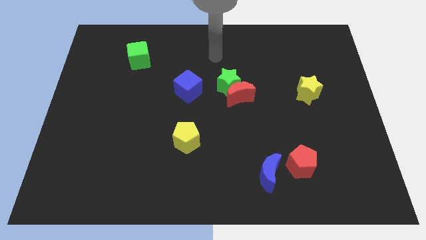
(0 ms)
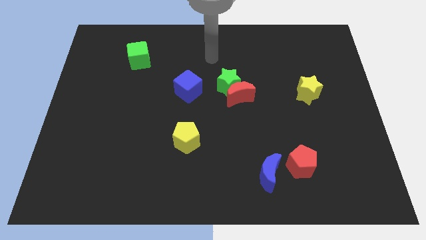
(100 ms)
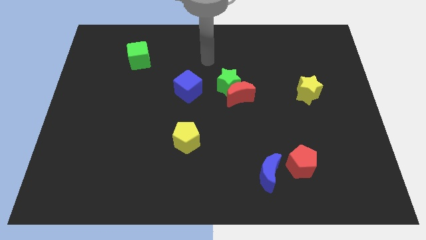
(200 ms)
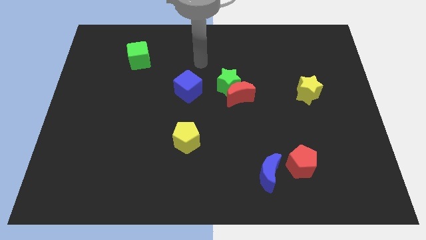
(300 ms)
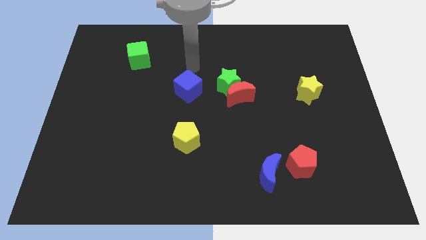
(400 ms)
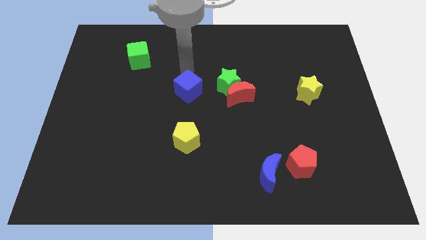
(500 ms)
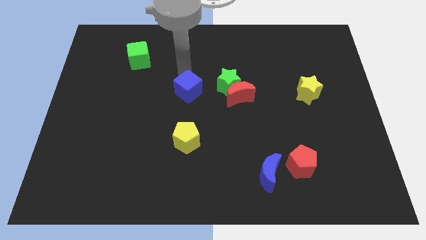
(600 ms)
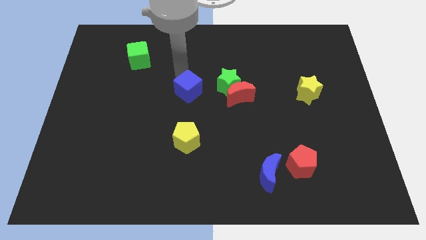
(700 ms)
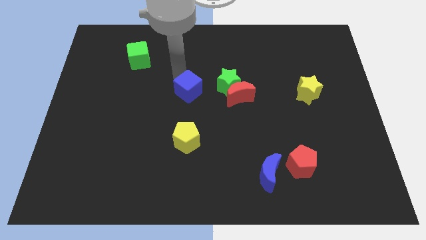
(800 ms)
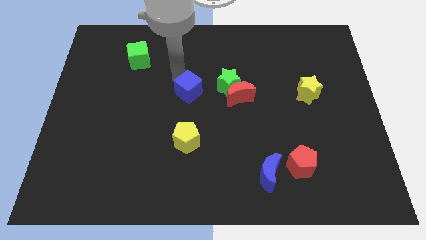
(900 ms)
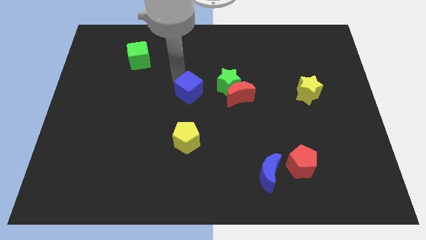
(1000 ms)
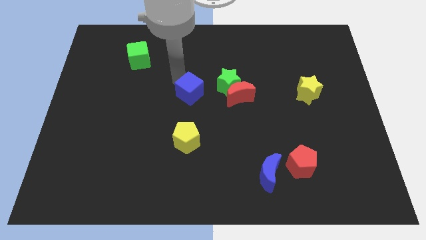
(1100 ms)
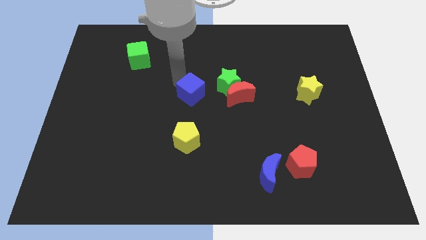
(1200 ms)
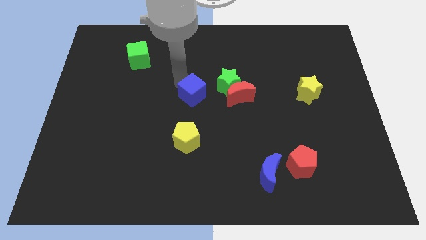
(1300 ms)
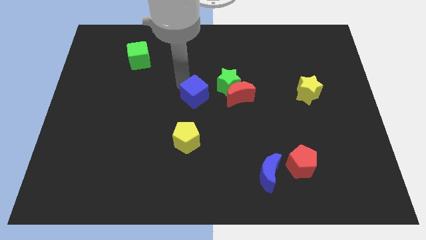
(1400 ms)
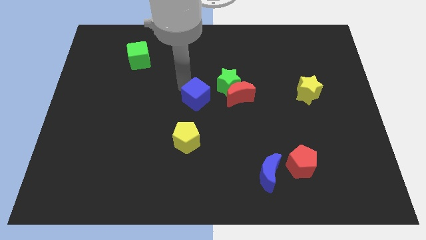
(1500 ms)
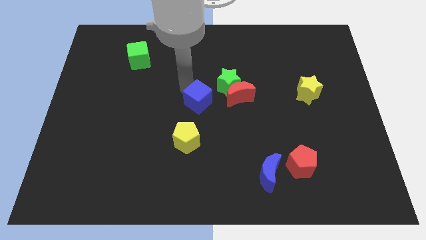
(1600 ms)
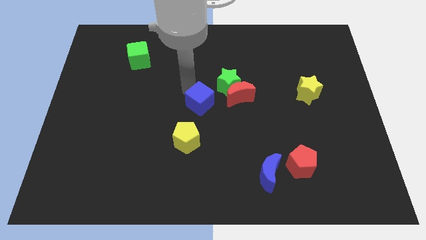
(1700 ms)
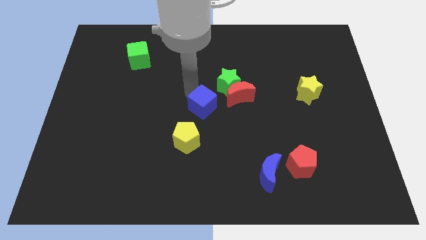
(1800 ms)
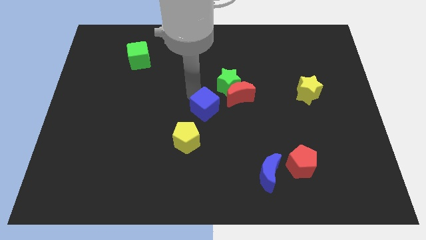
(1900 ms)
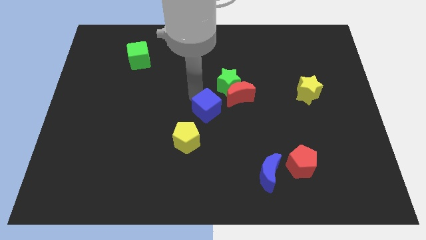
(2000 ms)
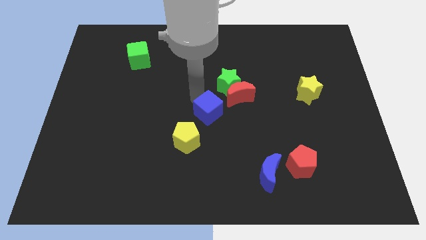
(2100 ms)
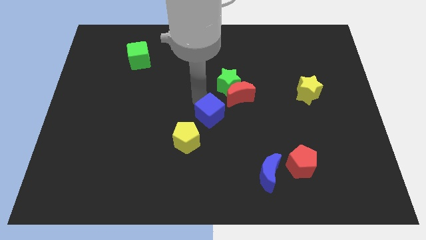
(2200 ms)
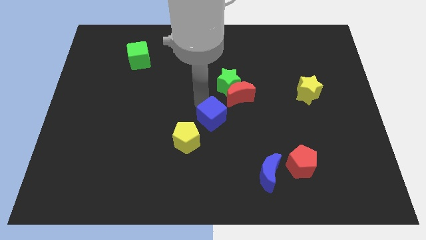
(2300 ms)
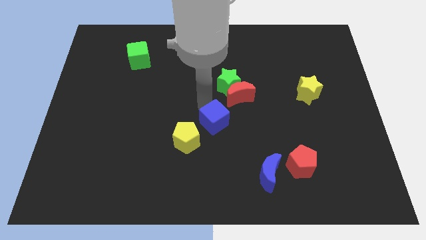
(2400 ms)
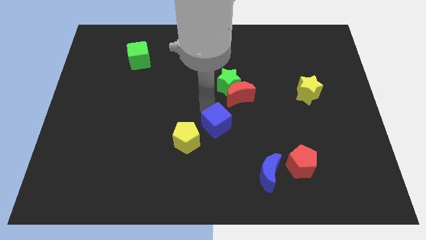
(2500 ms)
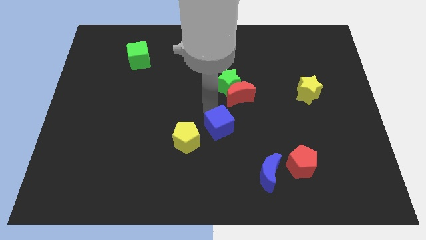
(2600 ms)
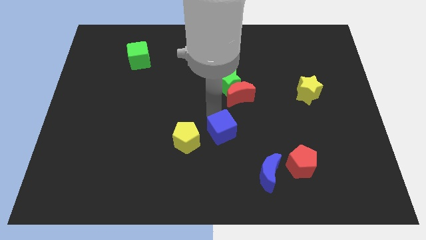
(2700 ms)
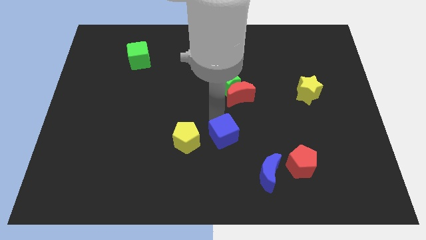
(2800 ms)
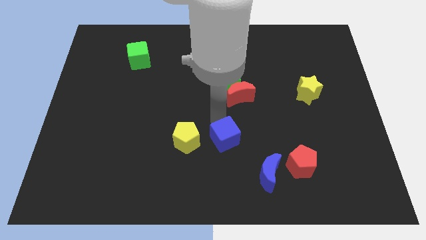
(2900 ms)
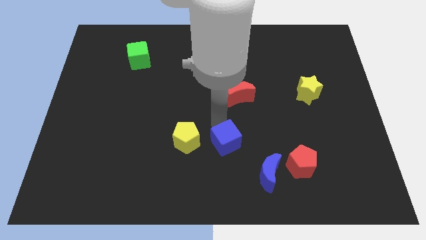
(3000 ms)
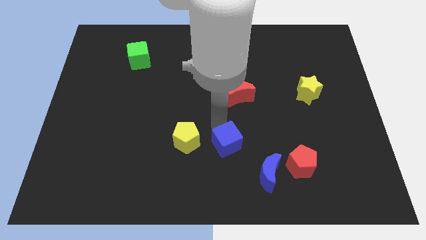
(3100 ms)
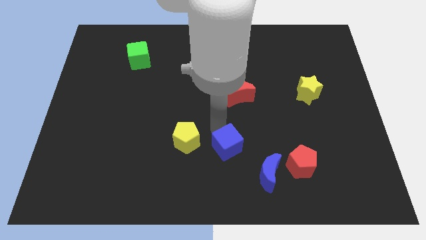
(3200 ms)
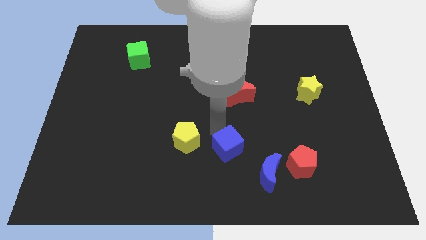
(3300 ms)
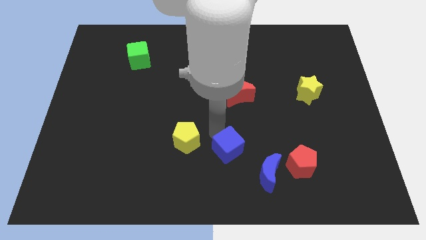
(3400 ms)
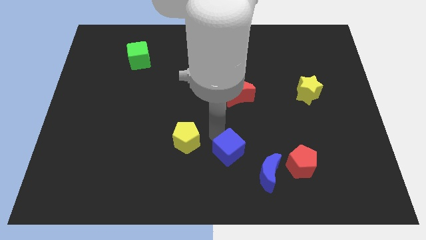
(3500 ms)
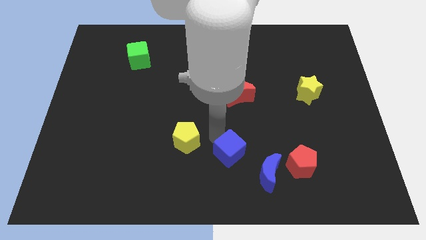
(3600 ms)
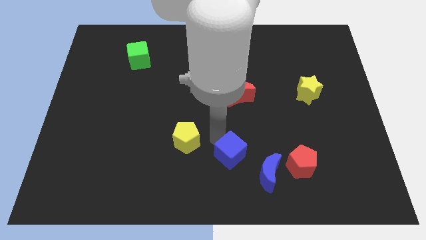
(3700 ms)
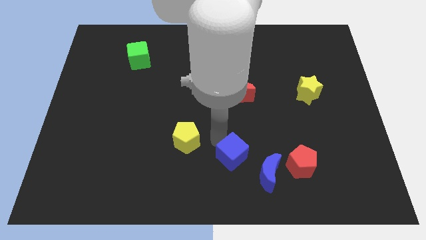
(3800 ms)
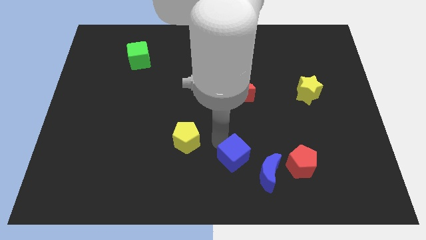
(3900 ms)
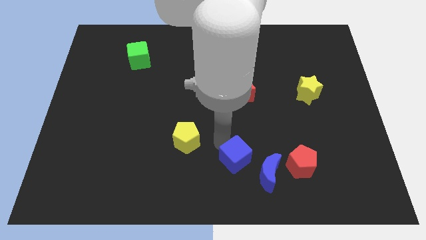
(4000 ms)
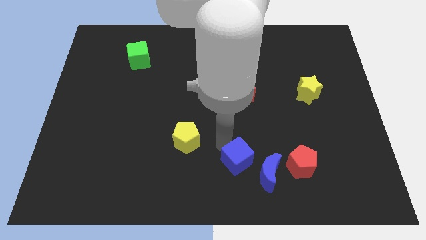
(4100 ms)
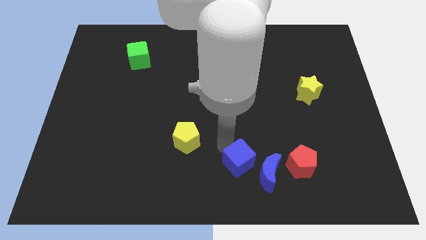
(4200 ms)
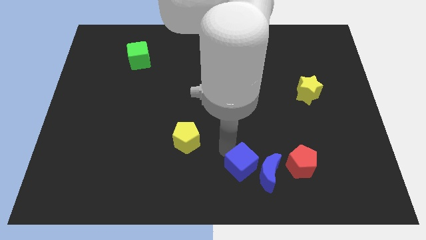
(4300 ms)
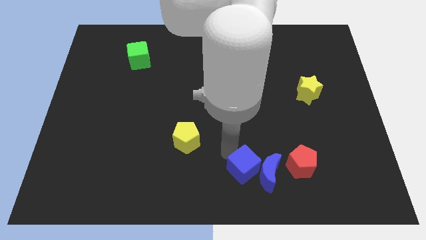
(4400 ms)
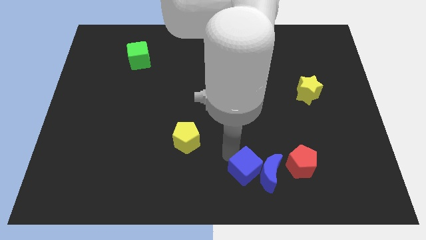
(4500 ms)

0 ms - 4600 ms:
slide the blue cube next to the blue moon

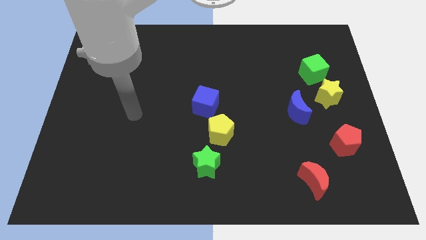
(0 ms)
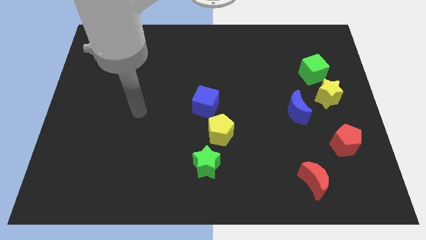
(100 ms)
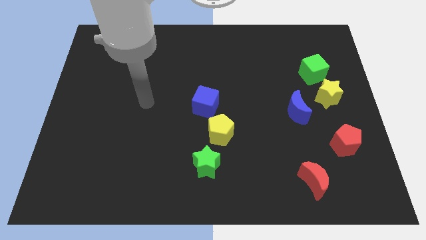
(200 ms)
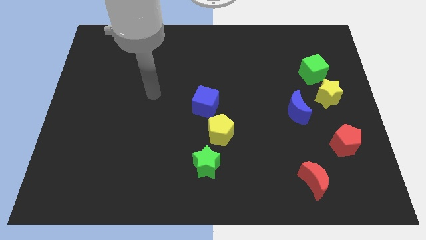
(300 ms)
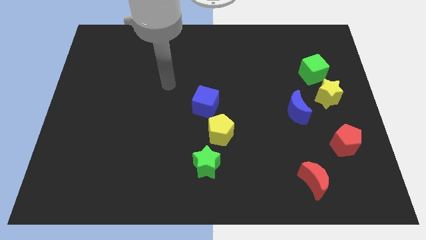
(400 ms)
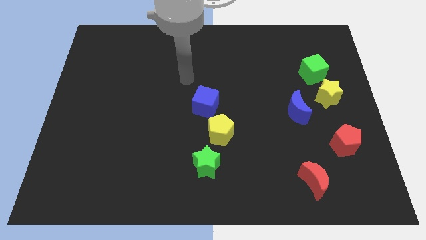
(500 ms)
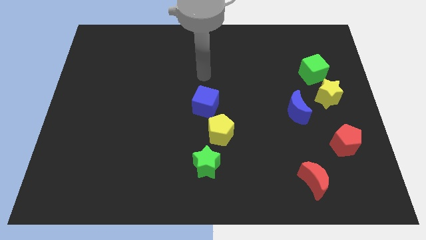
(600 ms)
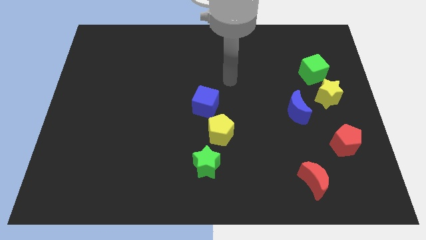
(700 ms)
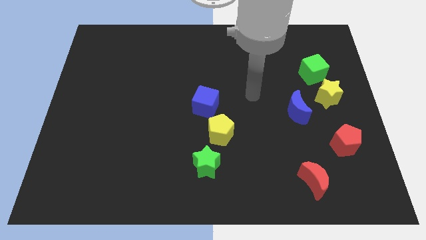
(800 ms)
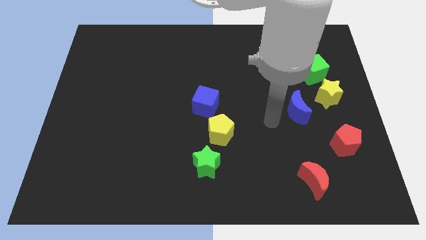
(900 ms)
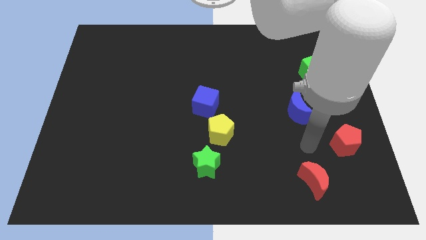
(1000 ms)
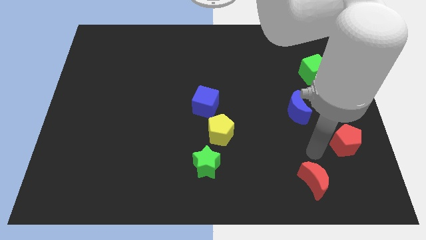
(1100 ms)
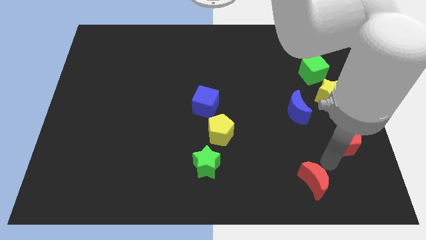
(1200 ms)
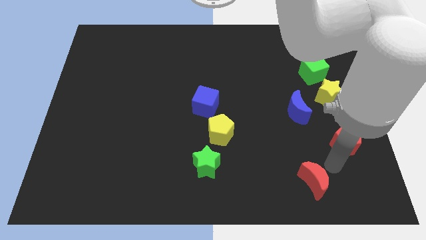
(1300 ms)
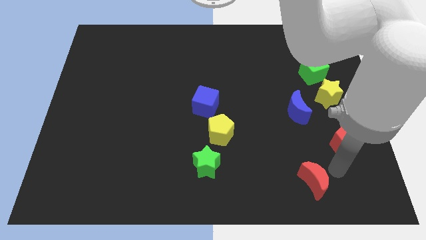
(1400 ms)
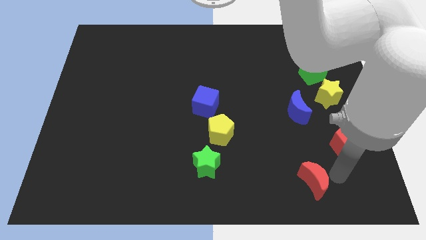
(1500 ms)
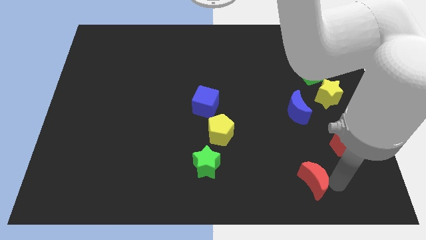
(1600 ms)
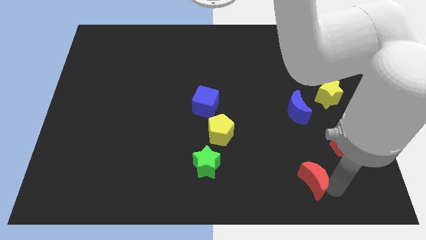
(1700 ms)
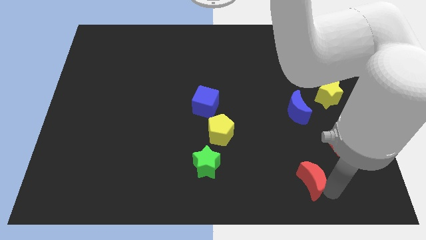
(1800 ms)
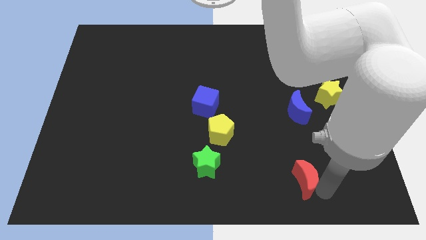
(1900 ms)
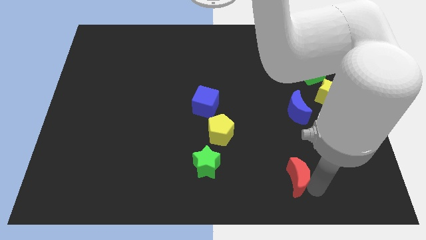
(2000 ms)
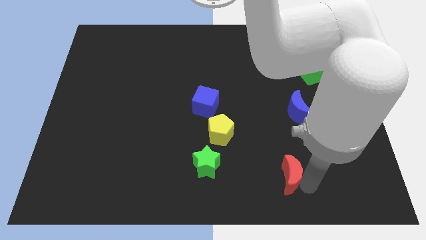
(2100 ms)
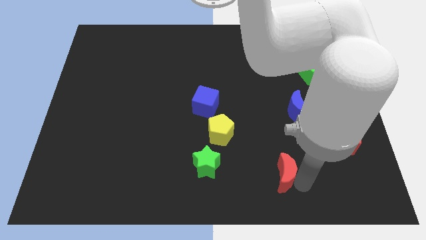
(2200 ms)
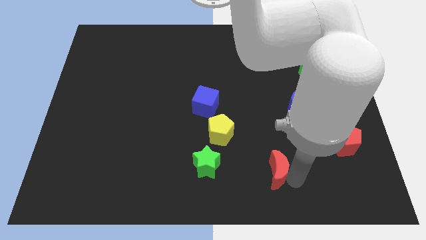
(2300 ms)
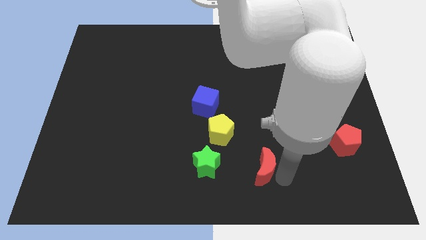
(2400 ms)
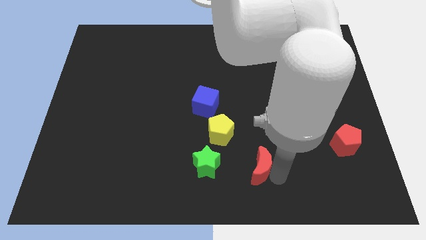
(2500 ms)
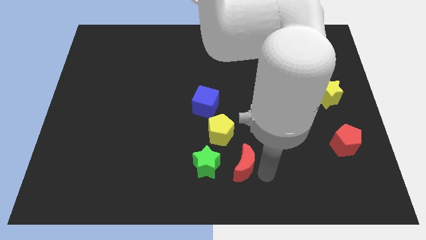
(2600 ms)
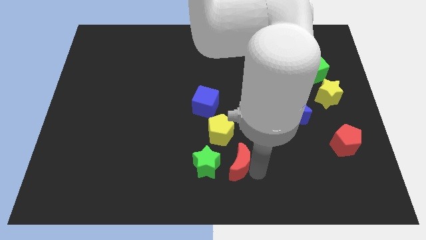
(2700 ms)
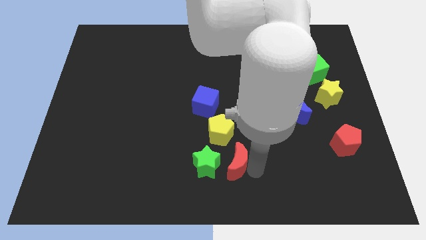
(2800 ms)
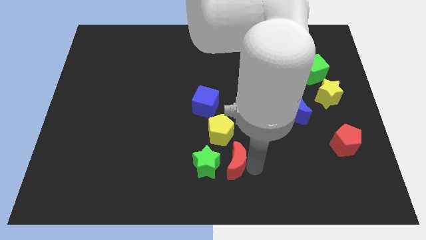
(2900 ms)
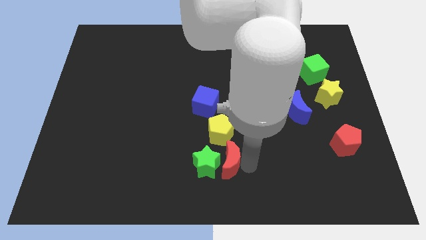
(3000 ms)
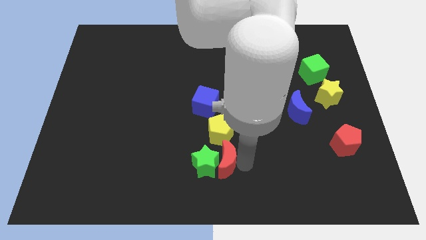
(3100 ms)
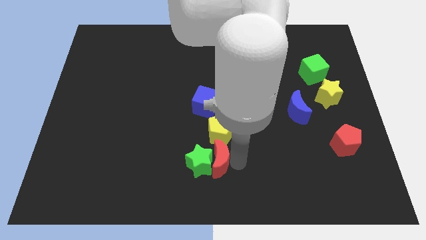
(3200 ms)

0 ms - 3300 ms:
slide the red moon to the green star

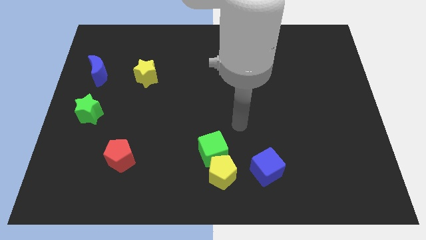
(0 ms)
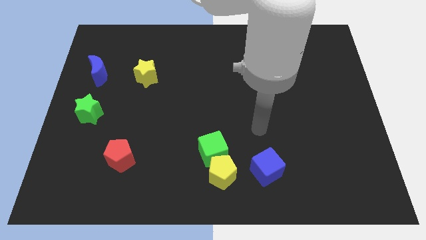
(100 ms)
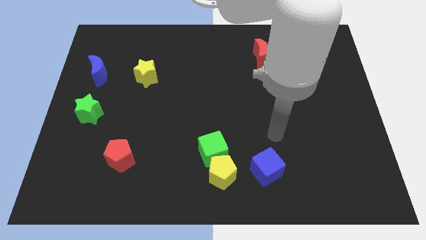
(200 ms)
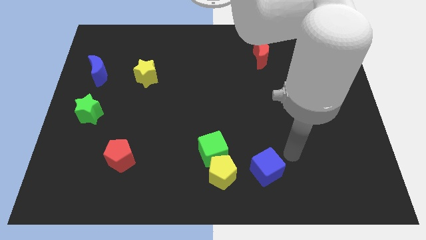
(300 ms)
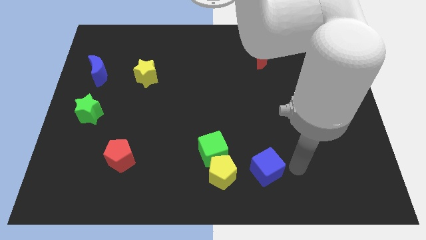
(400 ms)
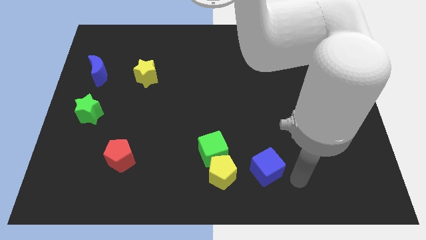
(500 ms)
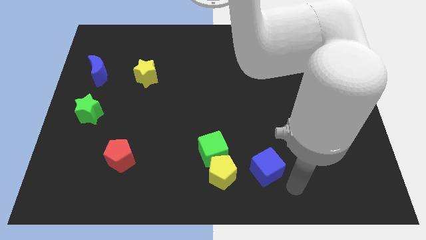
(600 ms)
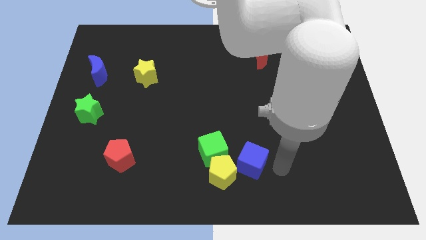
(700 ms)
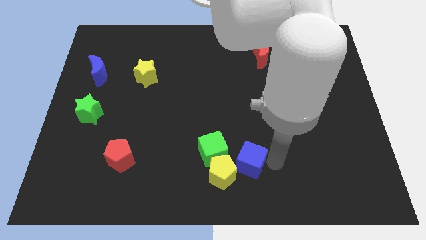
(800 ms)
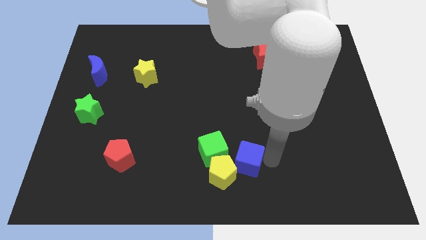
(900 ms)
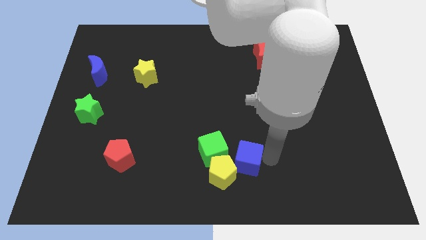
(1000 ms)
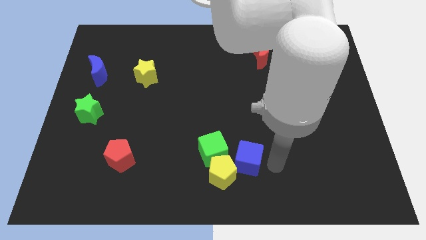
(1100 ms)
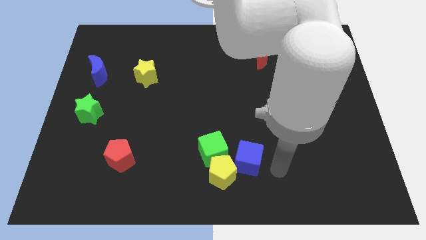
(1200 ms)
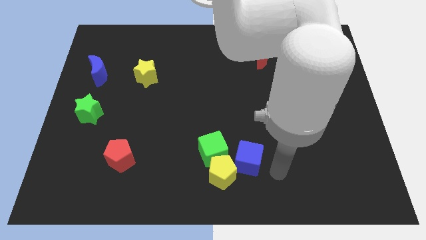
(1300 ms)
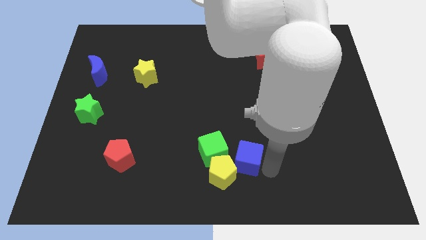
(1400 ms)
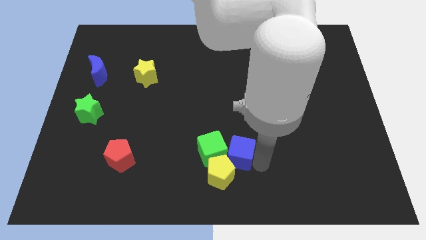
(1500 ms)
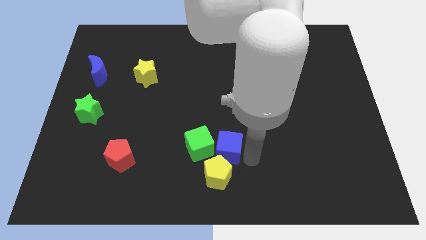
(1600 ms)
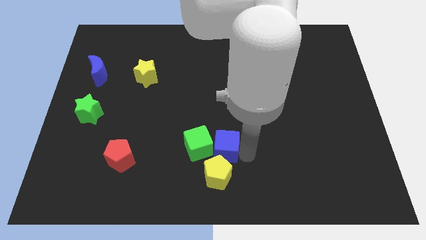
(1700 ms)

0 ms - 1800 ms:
put the blue cube next to the green cube
